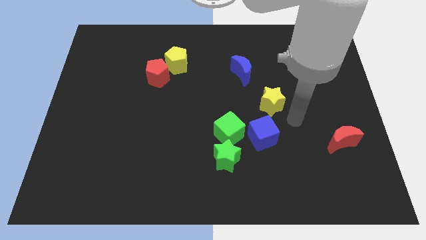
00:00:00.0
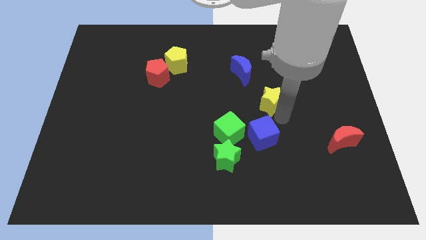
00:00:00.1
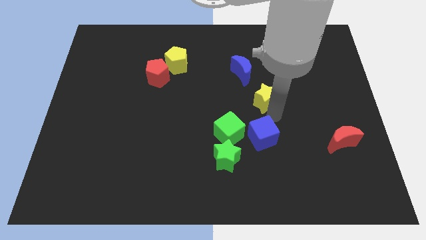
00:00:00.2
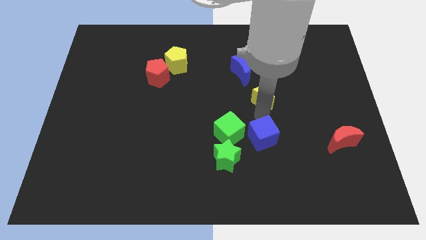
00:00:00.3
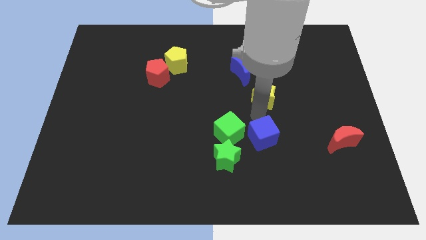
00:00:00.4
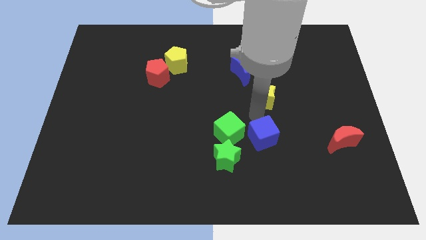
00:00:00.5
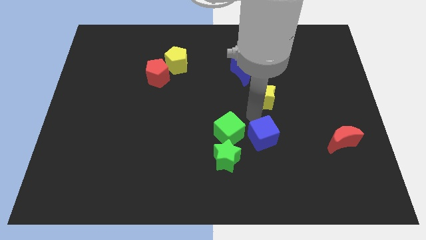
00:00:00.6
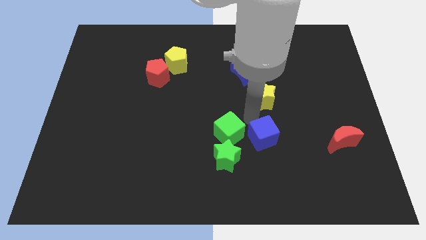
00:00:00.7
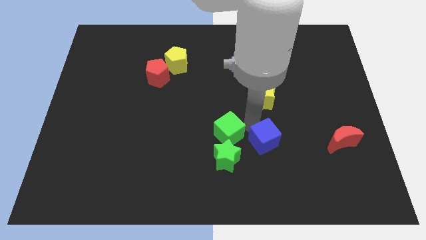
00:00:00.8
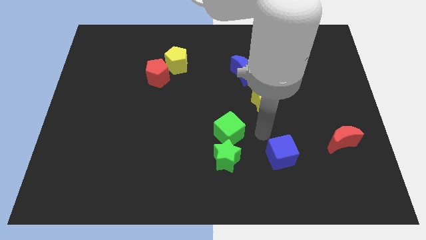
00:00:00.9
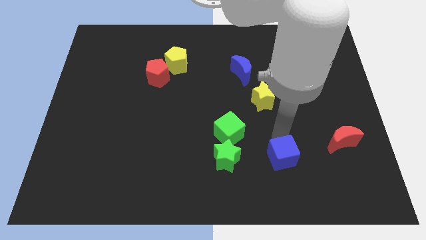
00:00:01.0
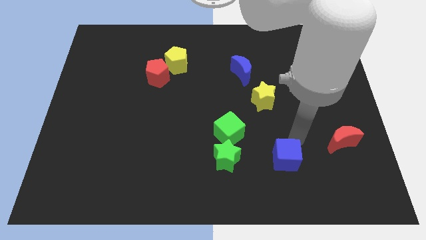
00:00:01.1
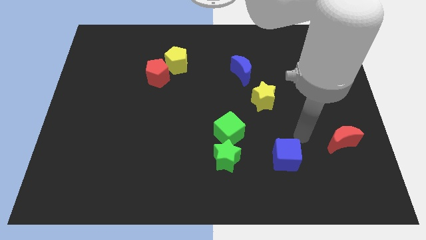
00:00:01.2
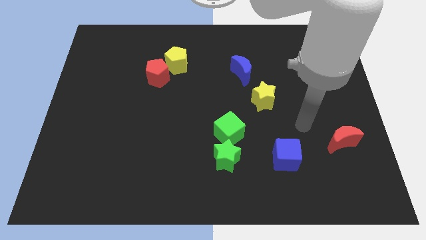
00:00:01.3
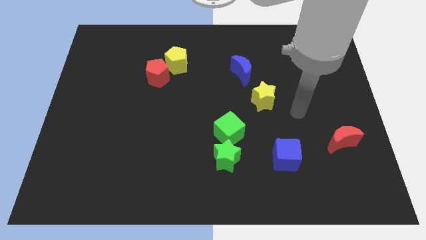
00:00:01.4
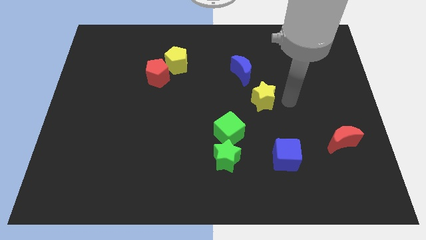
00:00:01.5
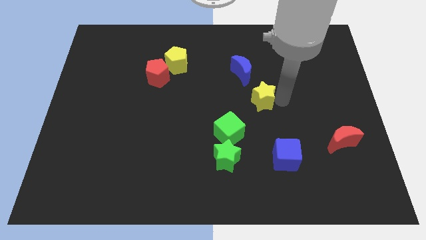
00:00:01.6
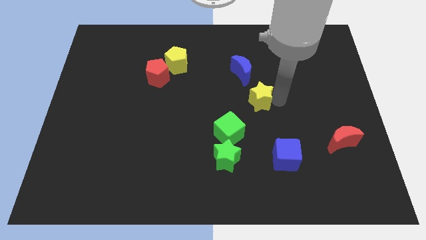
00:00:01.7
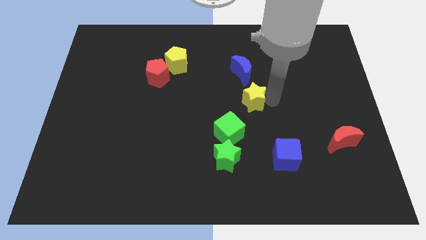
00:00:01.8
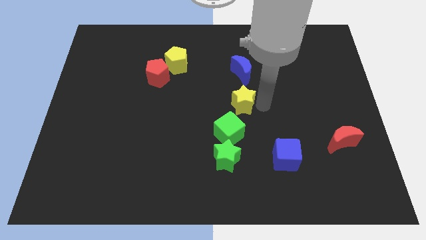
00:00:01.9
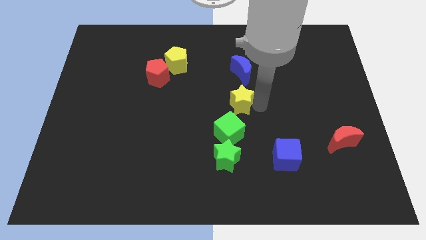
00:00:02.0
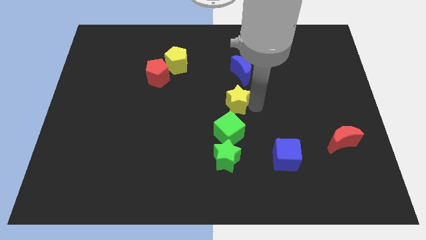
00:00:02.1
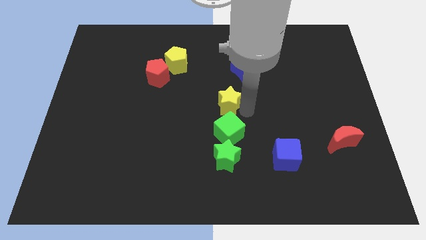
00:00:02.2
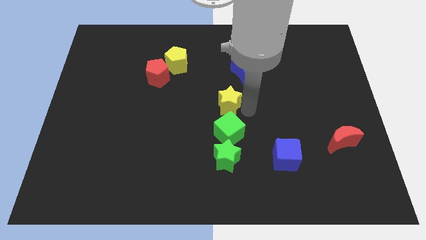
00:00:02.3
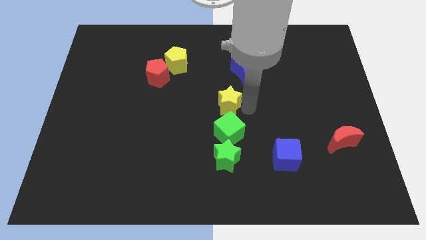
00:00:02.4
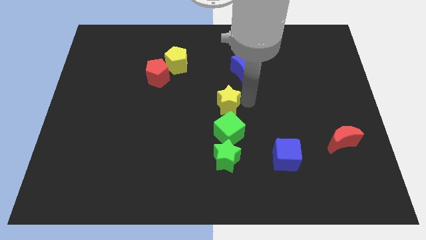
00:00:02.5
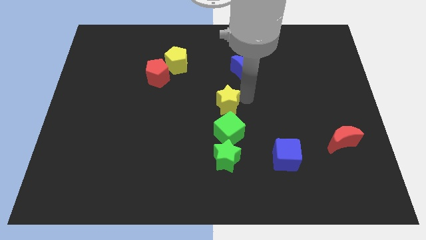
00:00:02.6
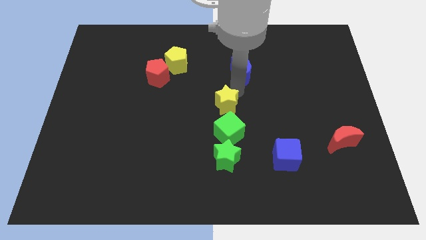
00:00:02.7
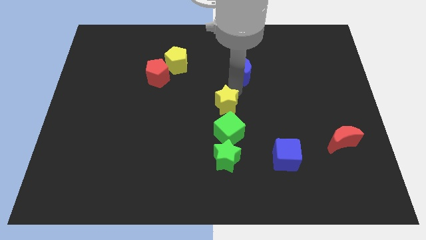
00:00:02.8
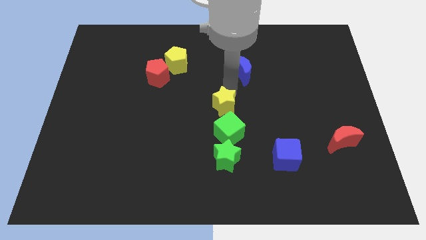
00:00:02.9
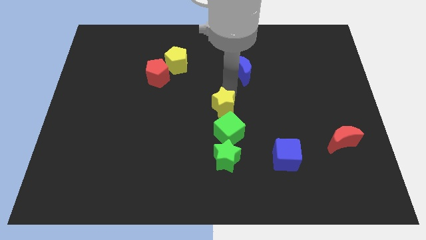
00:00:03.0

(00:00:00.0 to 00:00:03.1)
move the blue cube in between the red crescent and green star

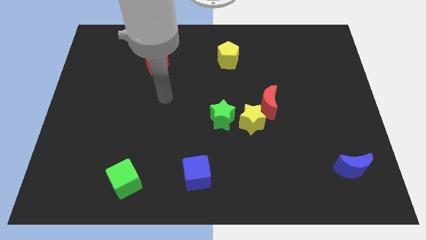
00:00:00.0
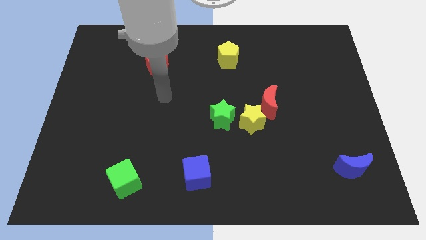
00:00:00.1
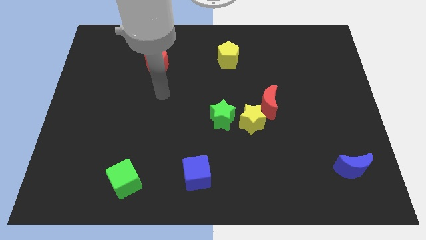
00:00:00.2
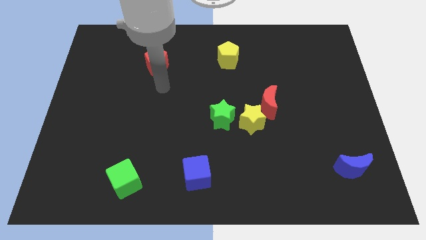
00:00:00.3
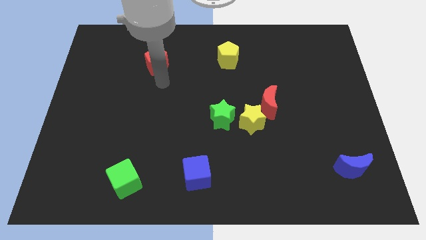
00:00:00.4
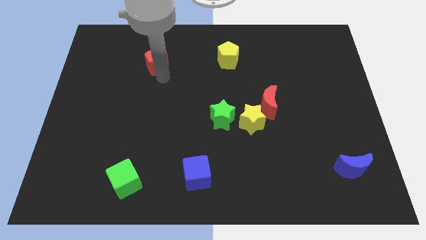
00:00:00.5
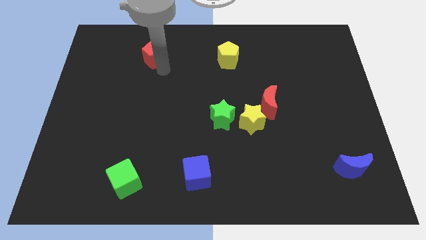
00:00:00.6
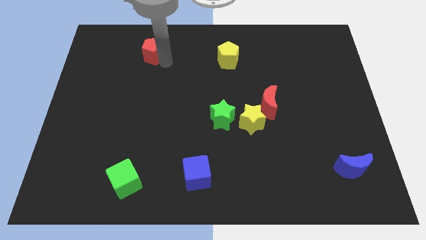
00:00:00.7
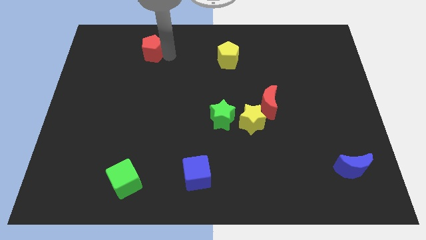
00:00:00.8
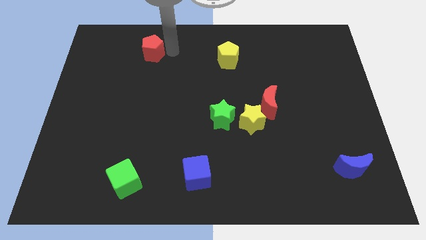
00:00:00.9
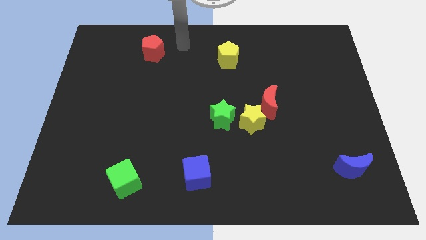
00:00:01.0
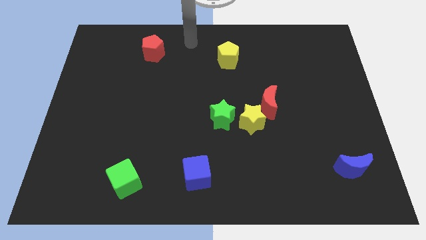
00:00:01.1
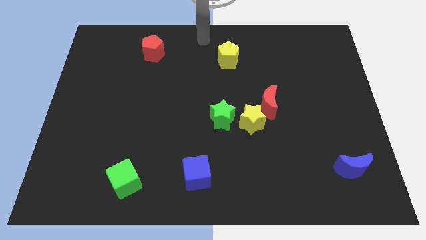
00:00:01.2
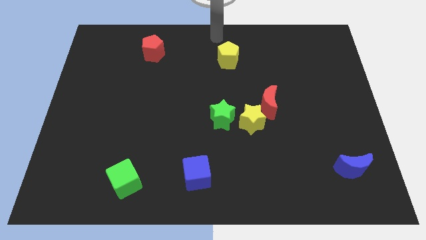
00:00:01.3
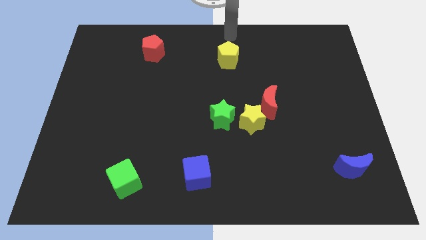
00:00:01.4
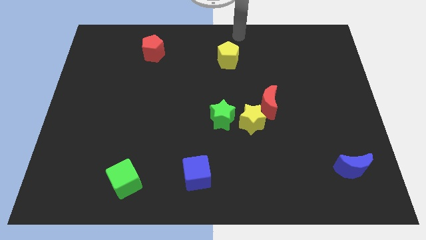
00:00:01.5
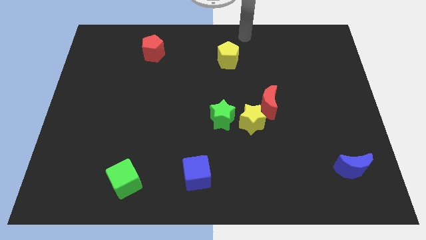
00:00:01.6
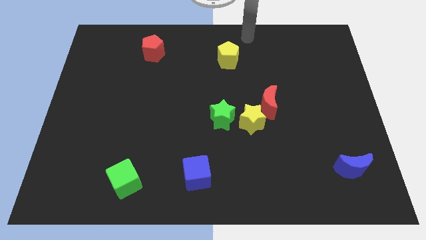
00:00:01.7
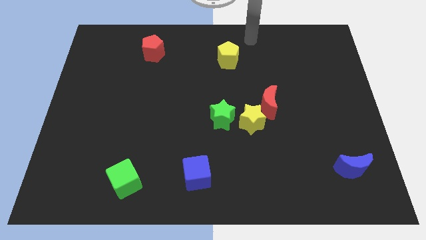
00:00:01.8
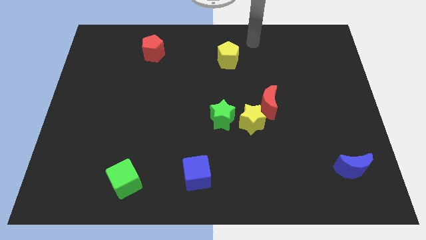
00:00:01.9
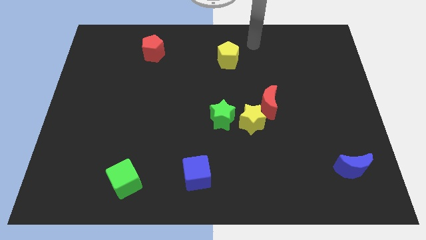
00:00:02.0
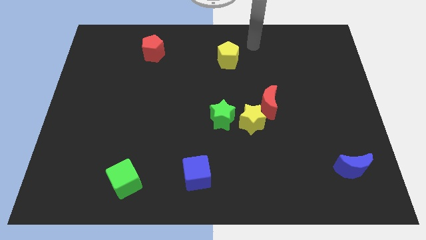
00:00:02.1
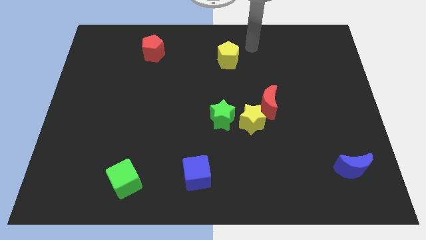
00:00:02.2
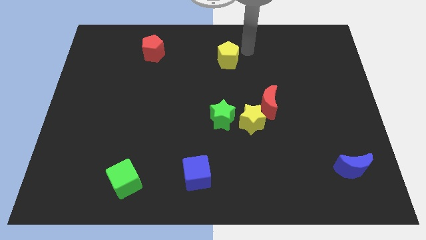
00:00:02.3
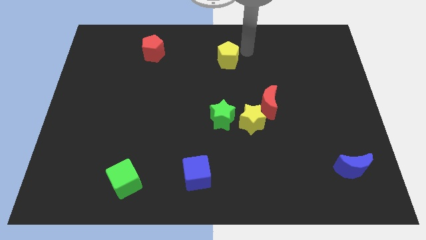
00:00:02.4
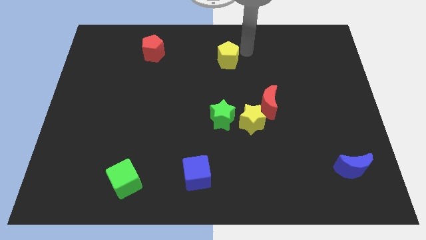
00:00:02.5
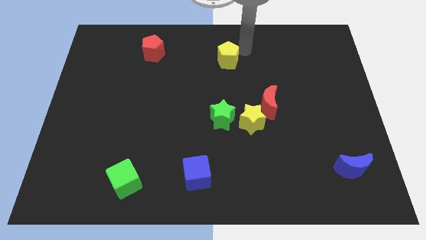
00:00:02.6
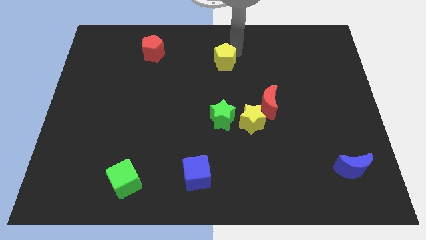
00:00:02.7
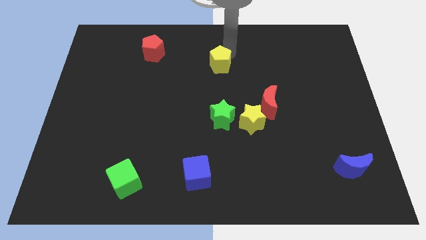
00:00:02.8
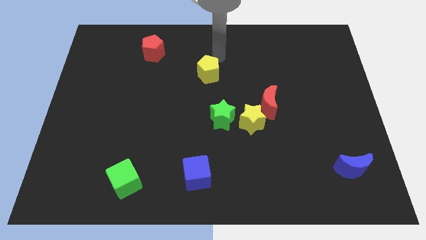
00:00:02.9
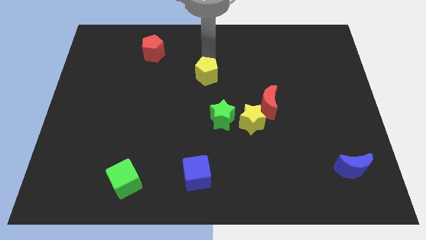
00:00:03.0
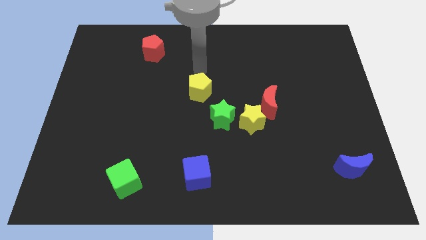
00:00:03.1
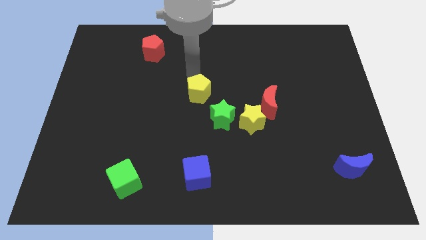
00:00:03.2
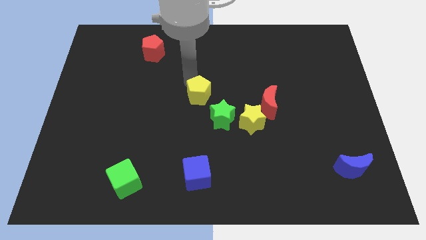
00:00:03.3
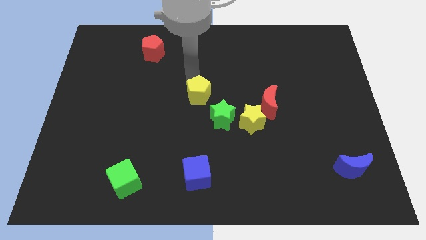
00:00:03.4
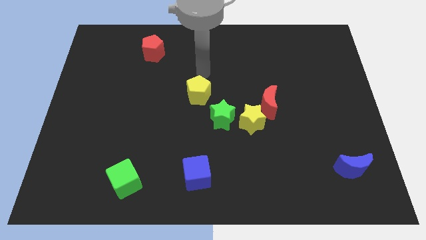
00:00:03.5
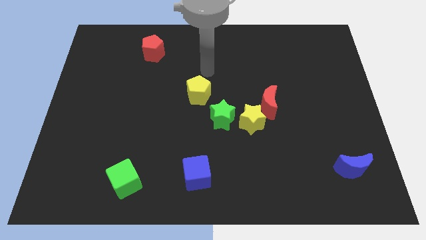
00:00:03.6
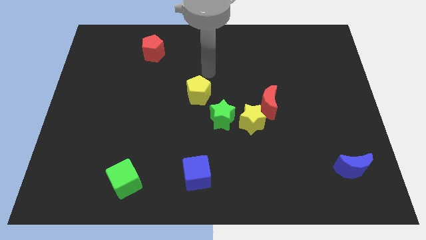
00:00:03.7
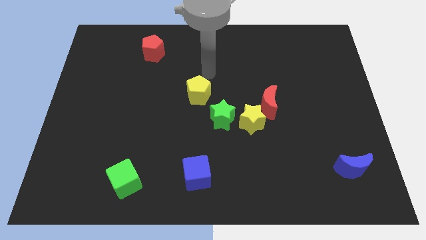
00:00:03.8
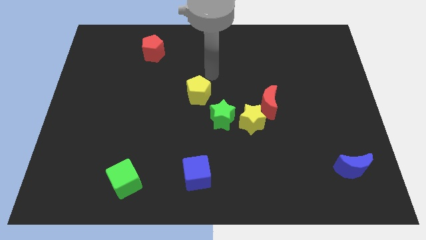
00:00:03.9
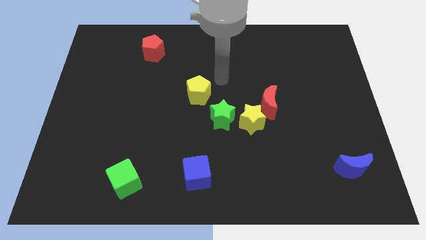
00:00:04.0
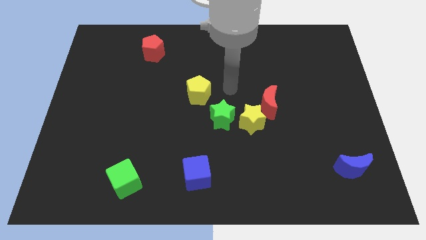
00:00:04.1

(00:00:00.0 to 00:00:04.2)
push the yellow pentagon diagonal to the green star

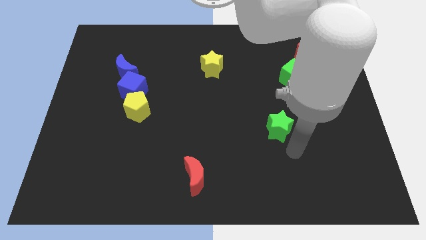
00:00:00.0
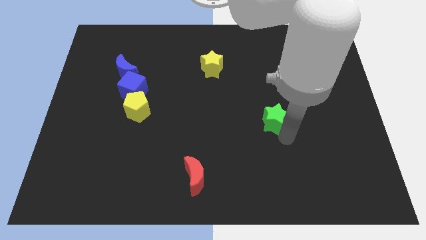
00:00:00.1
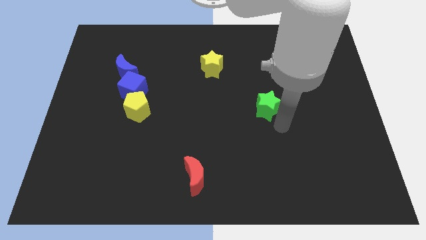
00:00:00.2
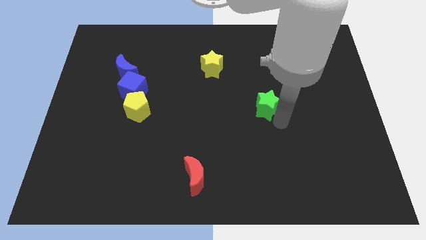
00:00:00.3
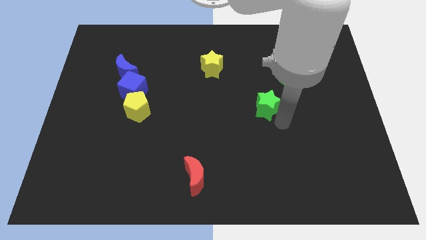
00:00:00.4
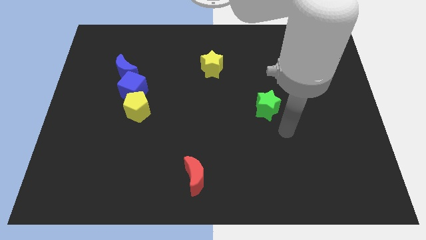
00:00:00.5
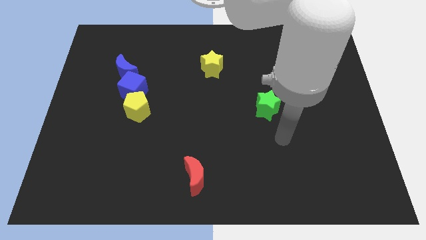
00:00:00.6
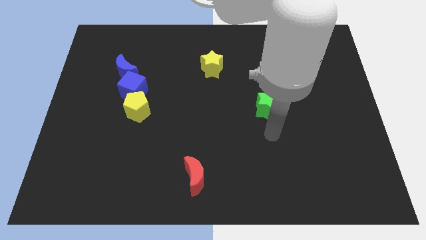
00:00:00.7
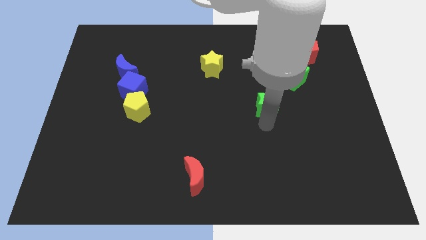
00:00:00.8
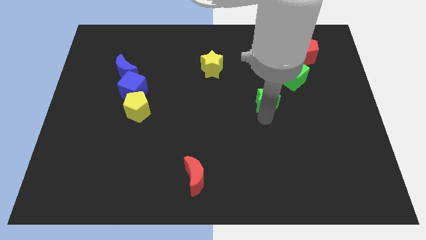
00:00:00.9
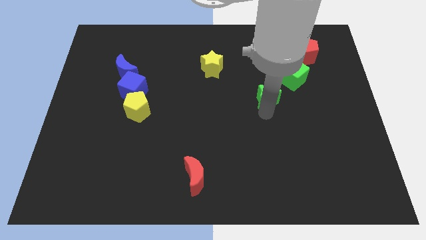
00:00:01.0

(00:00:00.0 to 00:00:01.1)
push the green star closer to the green cube

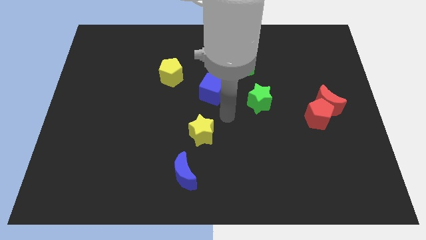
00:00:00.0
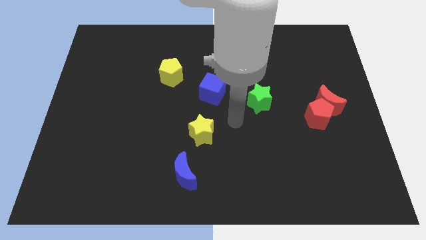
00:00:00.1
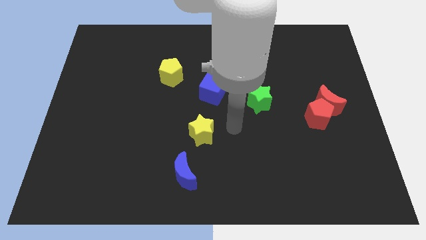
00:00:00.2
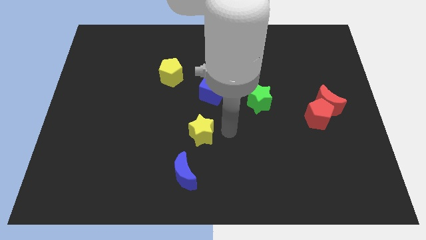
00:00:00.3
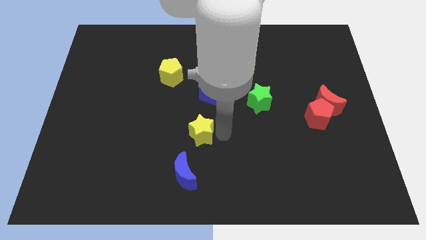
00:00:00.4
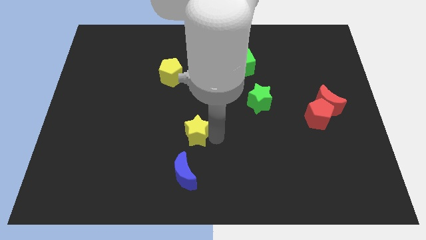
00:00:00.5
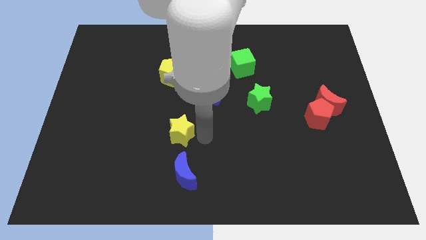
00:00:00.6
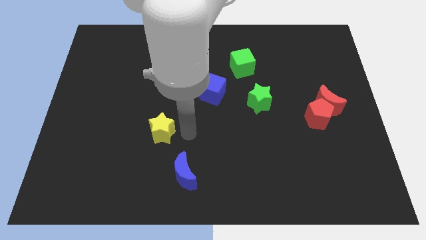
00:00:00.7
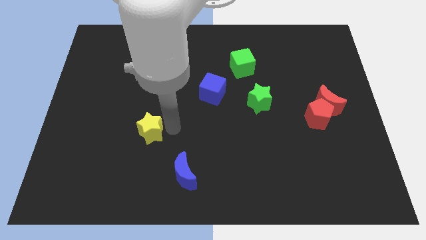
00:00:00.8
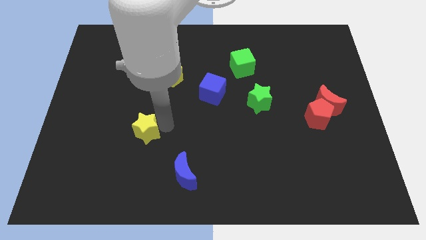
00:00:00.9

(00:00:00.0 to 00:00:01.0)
move yellow star slightly to the left
